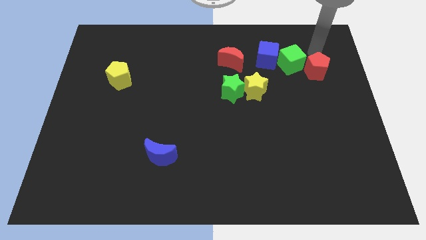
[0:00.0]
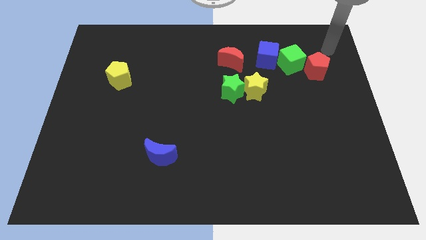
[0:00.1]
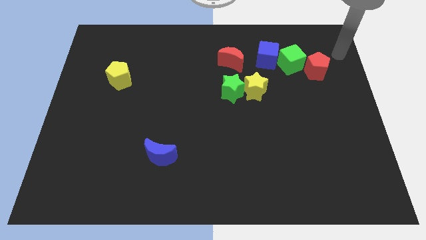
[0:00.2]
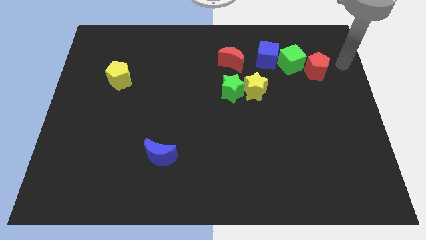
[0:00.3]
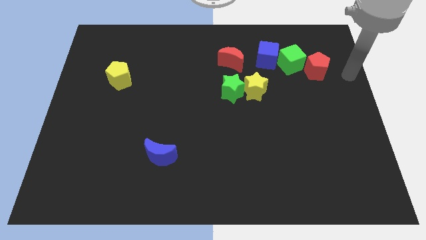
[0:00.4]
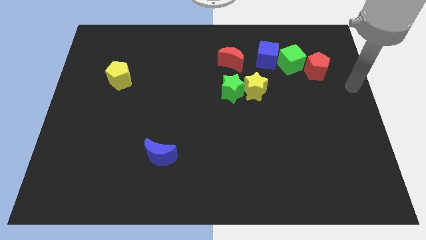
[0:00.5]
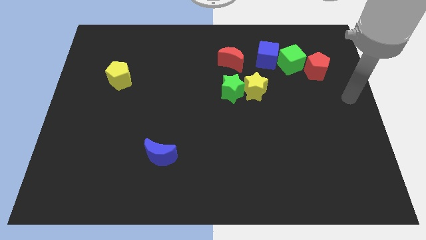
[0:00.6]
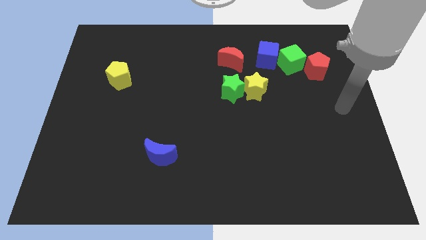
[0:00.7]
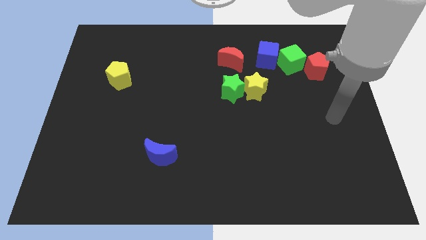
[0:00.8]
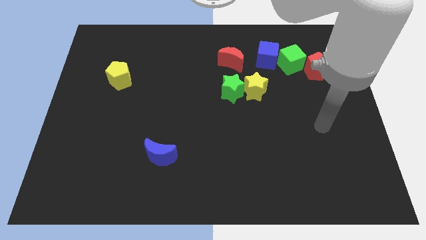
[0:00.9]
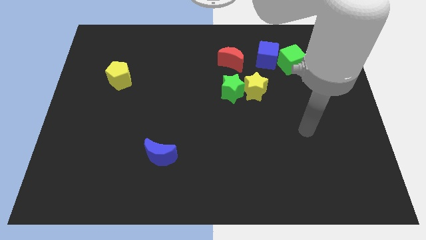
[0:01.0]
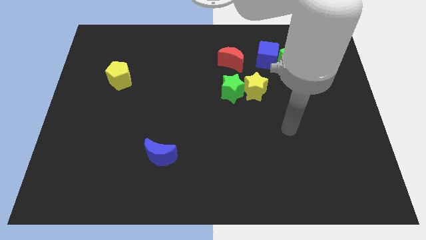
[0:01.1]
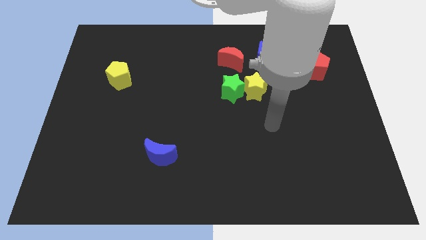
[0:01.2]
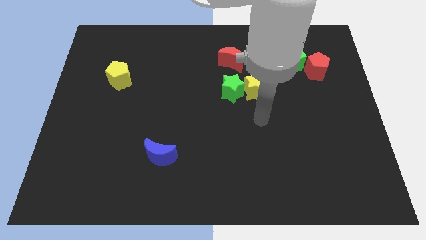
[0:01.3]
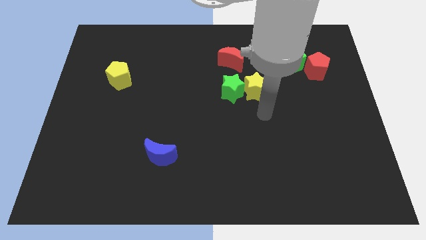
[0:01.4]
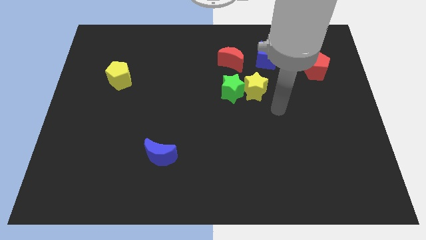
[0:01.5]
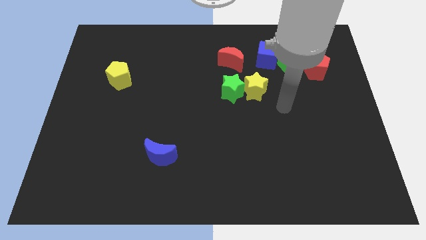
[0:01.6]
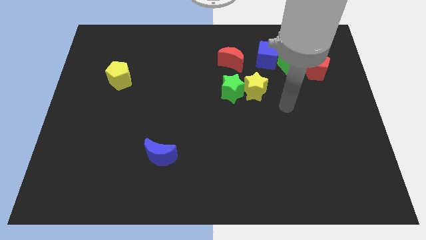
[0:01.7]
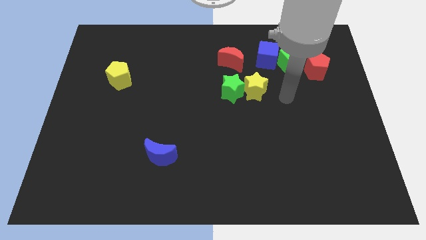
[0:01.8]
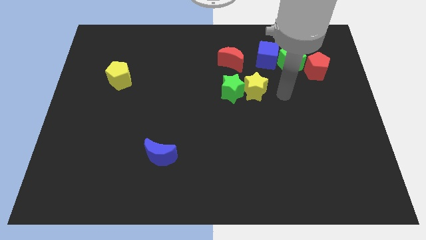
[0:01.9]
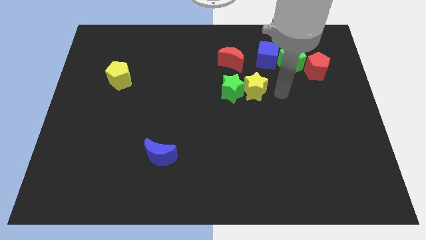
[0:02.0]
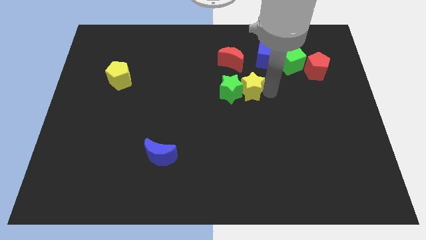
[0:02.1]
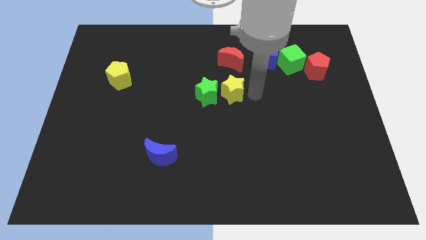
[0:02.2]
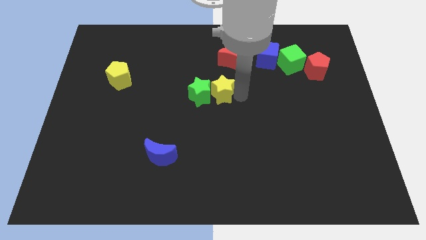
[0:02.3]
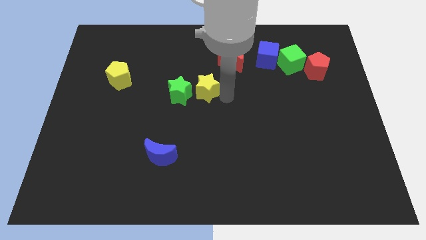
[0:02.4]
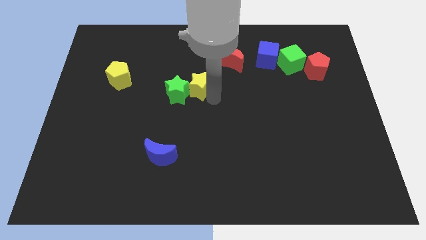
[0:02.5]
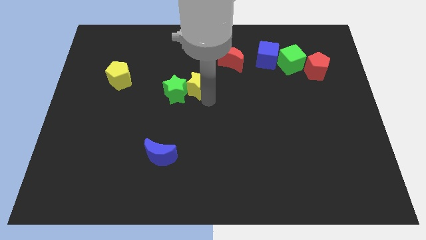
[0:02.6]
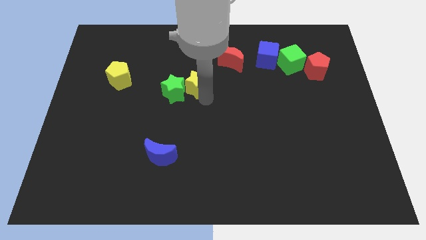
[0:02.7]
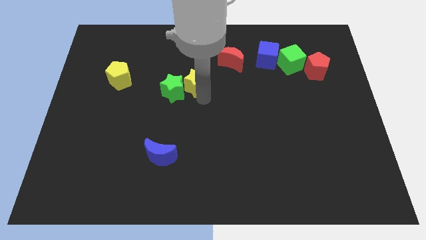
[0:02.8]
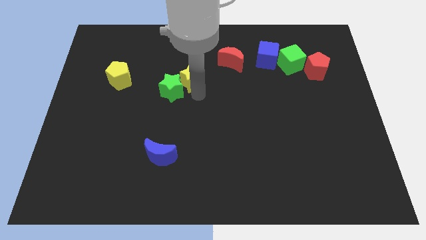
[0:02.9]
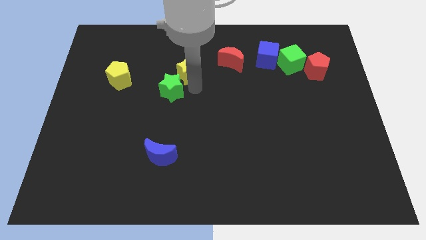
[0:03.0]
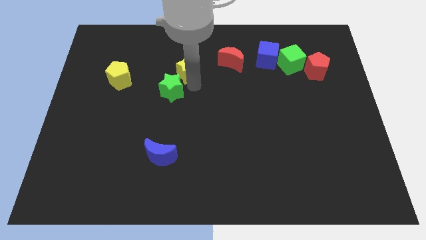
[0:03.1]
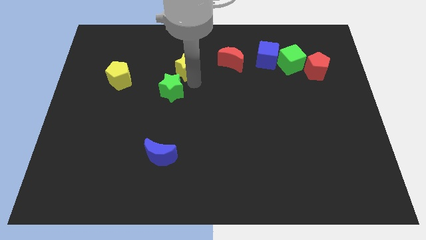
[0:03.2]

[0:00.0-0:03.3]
push the yellow star into the green star towards the yellow pentagon

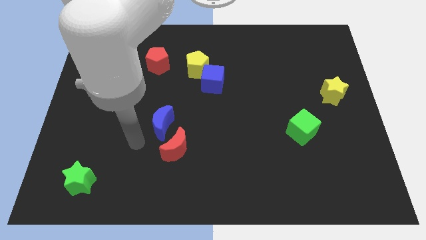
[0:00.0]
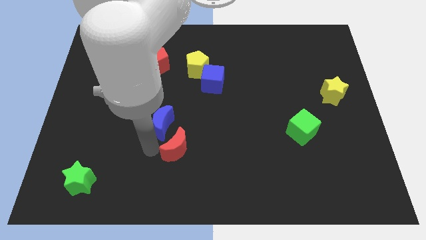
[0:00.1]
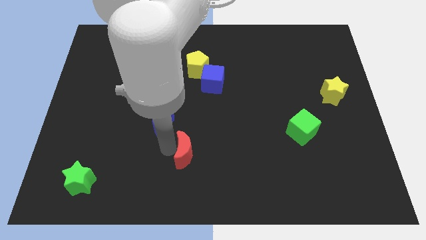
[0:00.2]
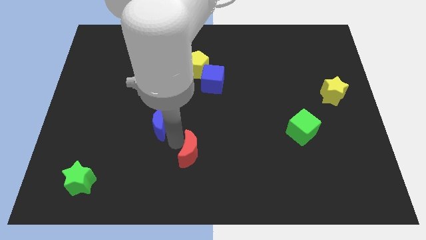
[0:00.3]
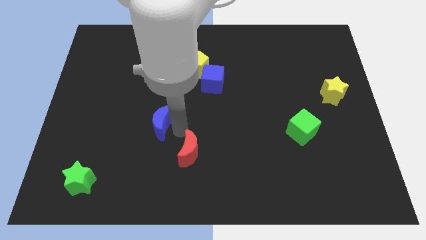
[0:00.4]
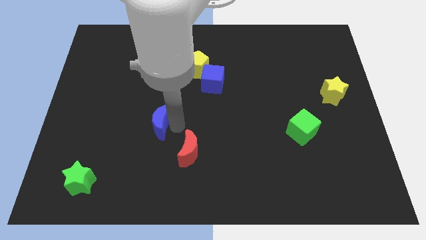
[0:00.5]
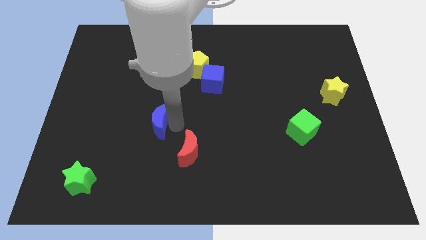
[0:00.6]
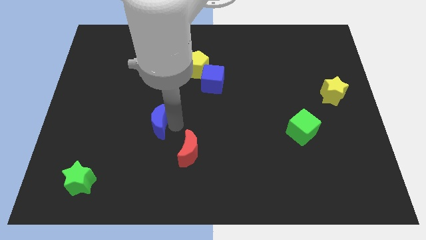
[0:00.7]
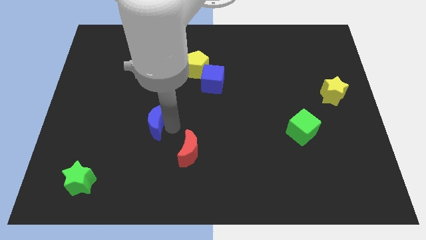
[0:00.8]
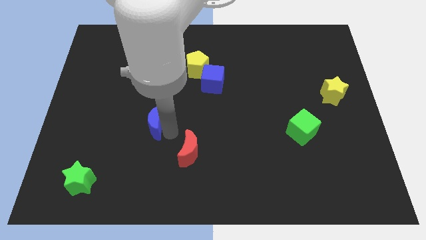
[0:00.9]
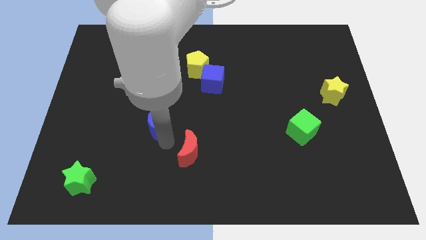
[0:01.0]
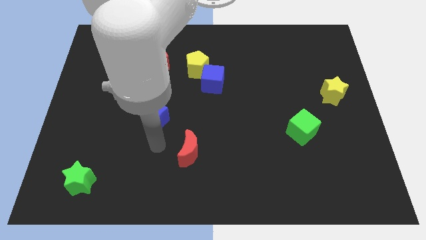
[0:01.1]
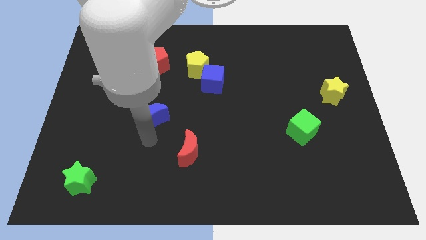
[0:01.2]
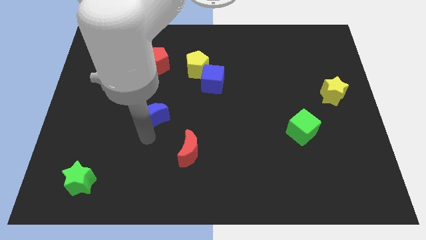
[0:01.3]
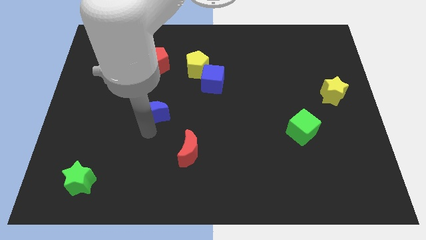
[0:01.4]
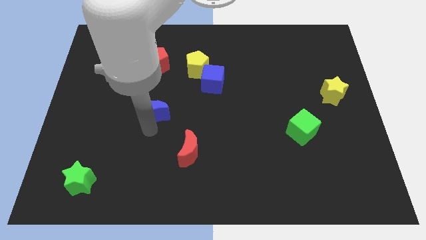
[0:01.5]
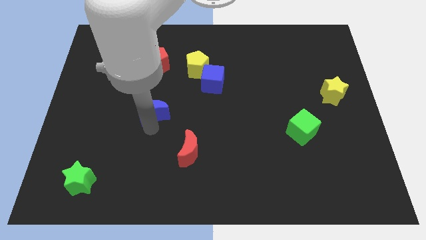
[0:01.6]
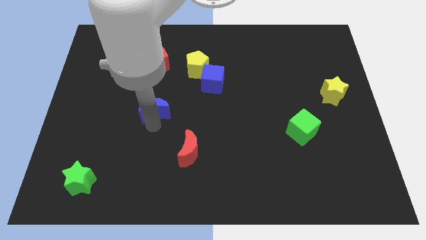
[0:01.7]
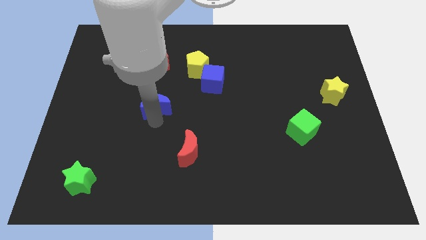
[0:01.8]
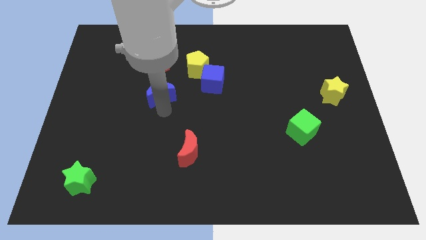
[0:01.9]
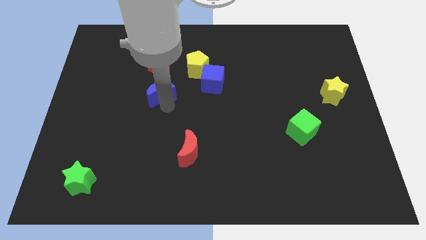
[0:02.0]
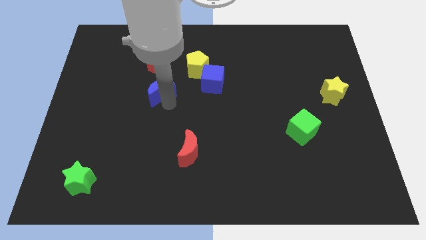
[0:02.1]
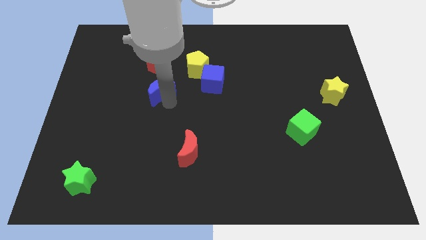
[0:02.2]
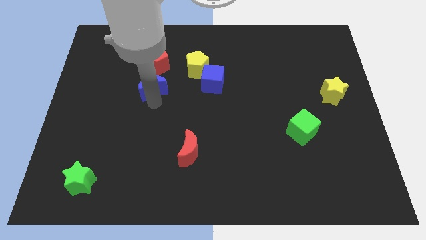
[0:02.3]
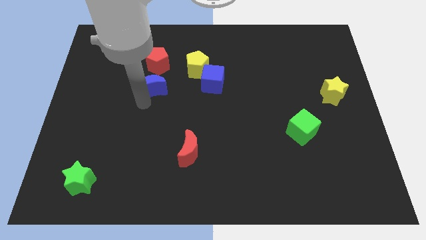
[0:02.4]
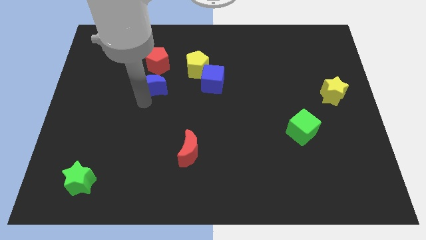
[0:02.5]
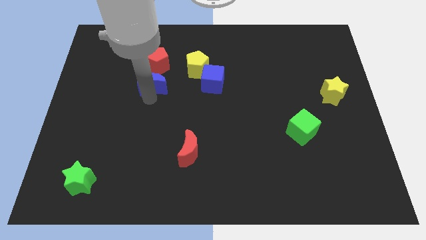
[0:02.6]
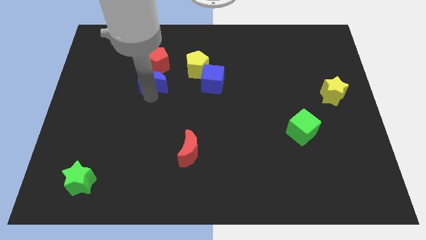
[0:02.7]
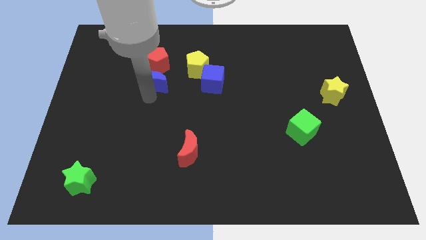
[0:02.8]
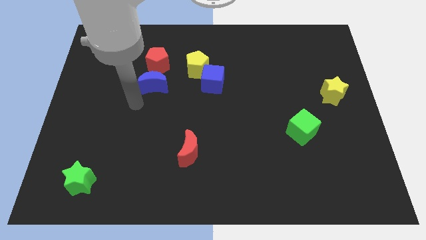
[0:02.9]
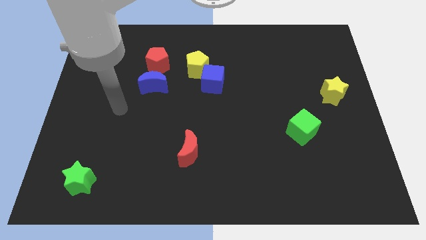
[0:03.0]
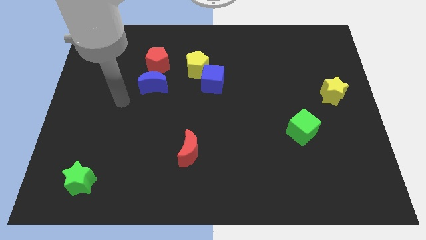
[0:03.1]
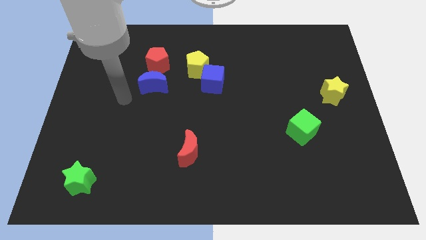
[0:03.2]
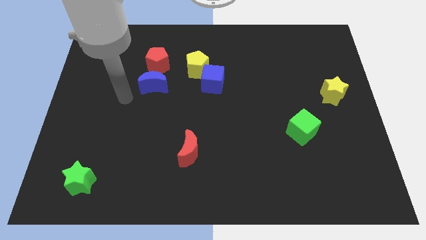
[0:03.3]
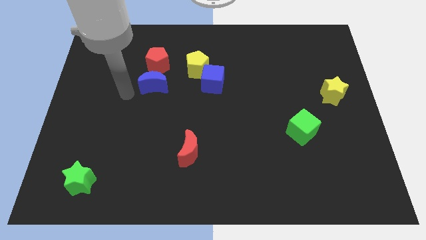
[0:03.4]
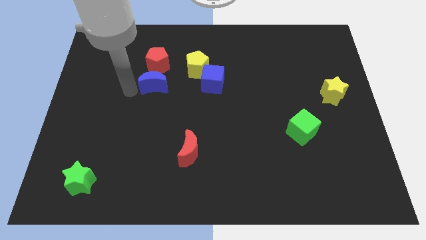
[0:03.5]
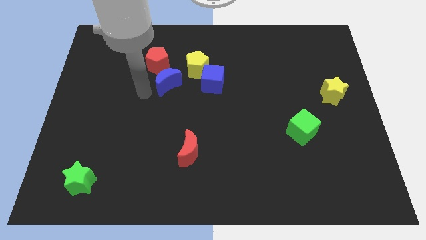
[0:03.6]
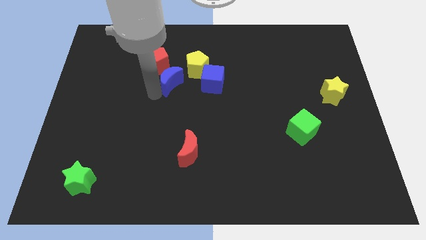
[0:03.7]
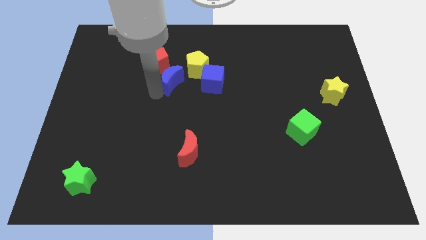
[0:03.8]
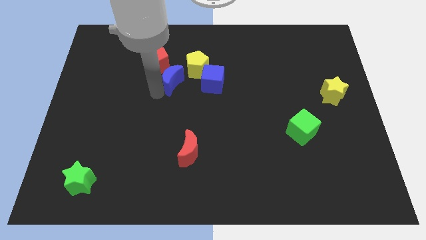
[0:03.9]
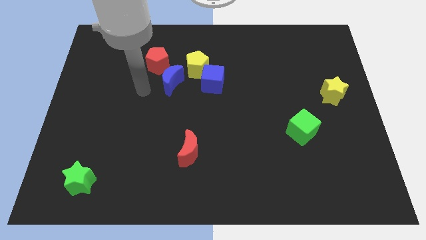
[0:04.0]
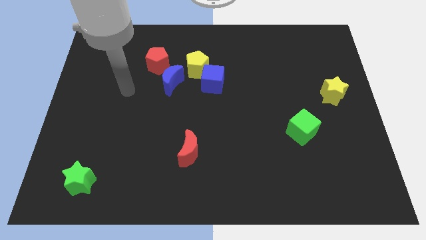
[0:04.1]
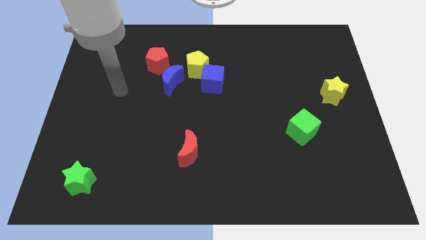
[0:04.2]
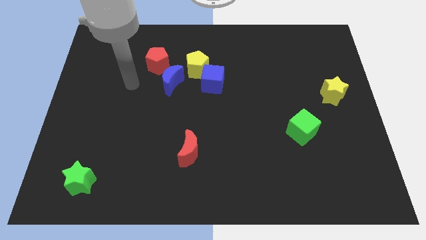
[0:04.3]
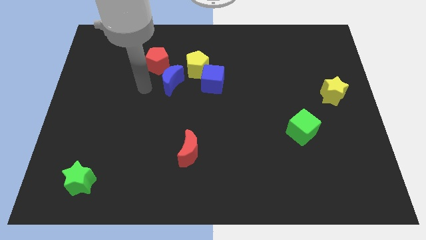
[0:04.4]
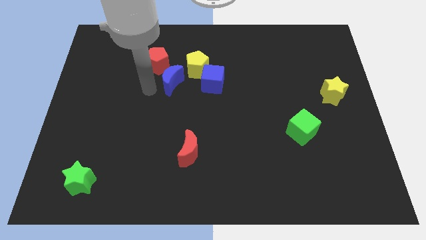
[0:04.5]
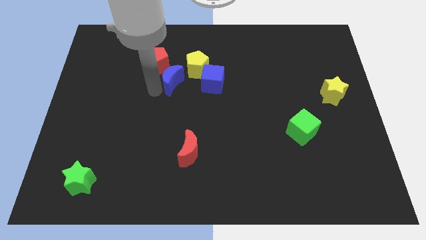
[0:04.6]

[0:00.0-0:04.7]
move the blue crescent to right bottom of red pentagon

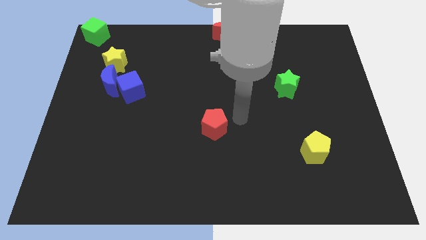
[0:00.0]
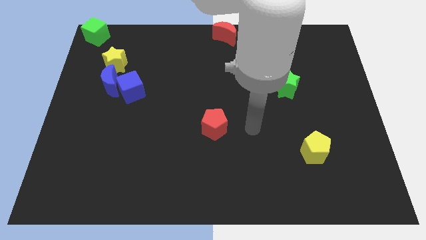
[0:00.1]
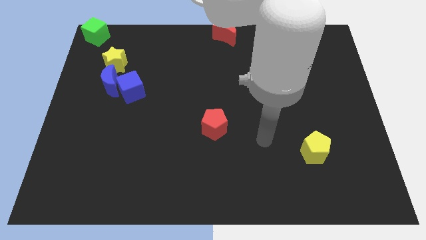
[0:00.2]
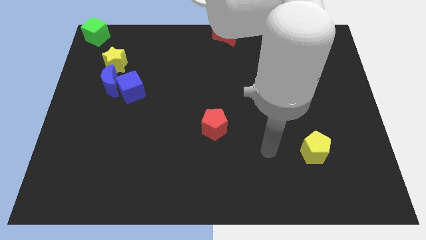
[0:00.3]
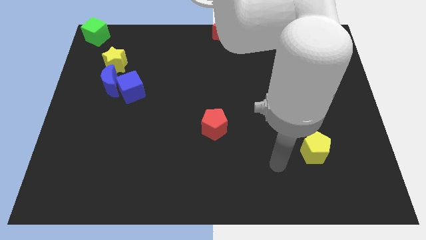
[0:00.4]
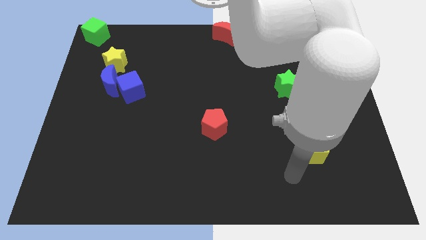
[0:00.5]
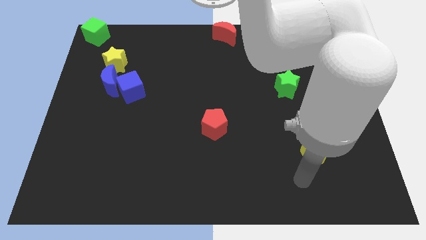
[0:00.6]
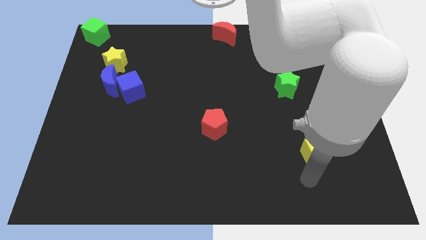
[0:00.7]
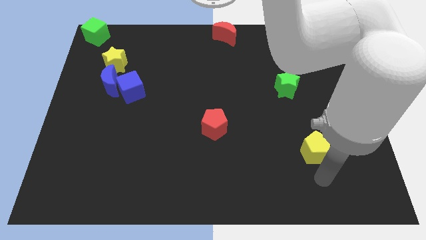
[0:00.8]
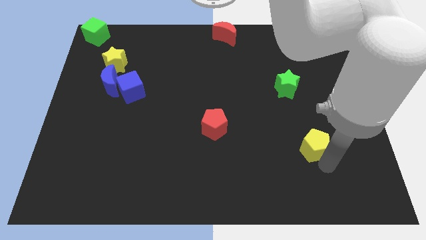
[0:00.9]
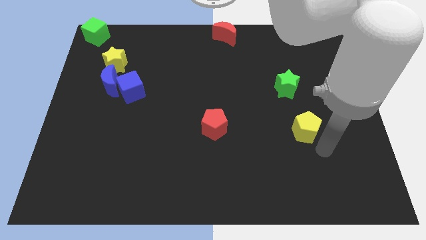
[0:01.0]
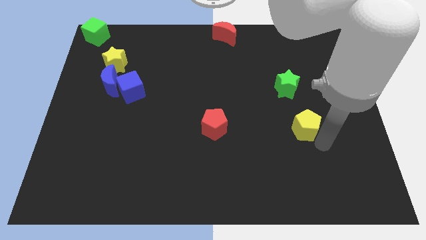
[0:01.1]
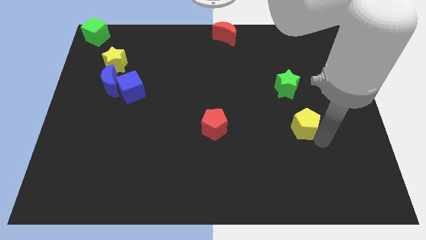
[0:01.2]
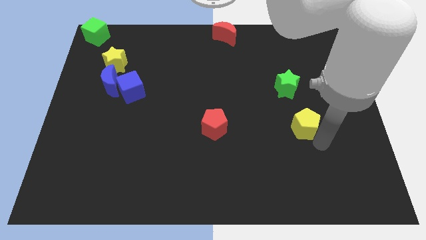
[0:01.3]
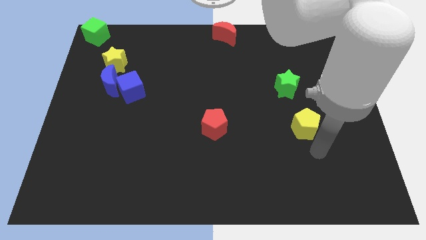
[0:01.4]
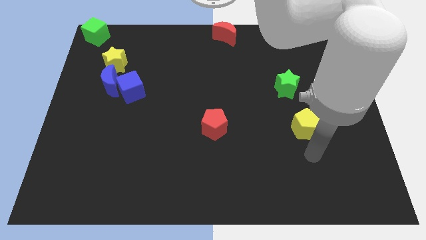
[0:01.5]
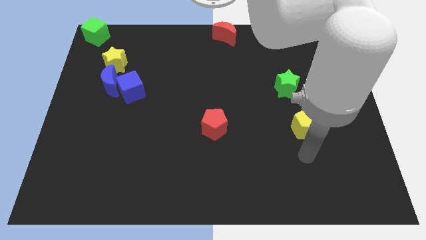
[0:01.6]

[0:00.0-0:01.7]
push the yellow pentagon towards to the green star
